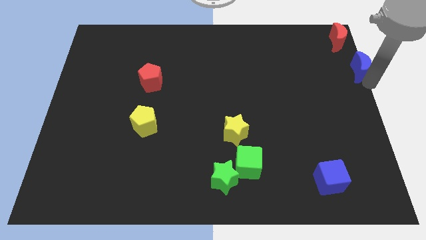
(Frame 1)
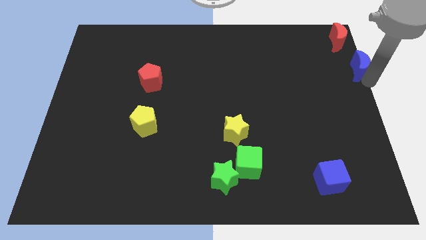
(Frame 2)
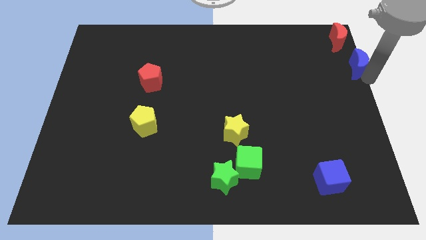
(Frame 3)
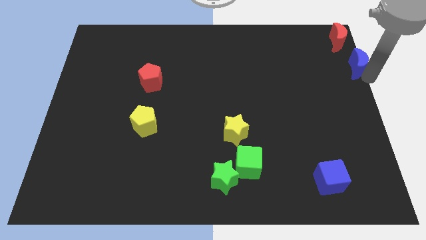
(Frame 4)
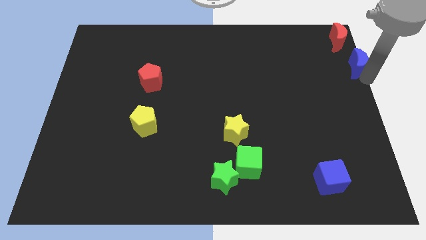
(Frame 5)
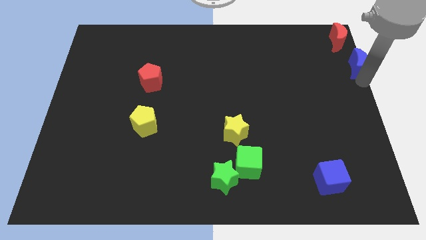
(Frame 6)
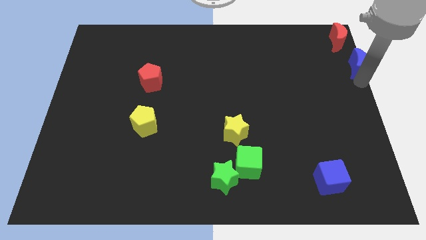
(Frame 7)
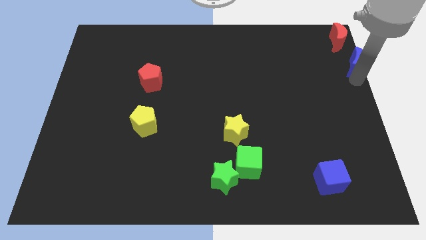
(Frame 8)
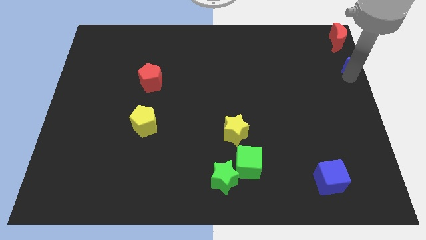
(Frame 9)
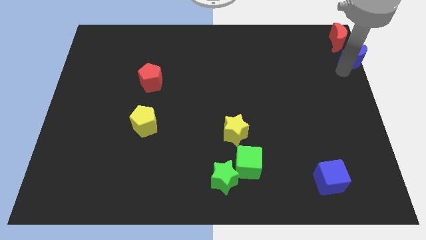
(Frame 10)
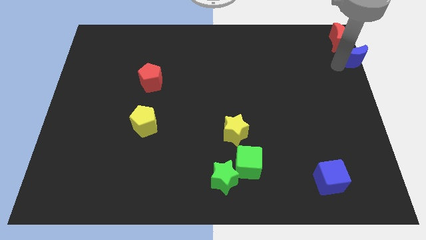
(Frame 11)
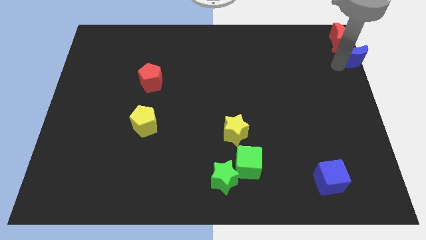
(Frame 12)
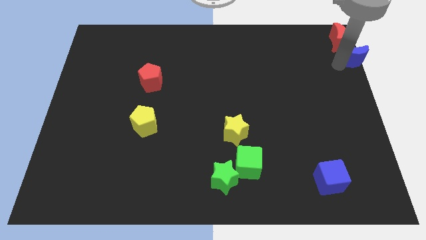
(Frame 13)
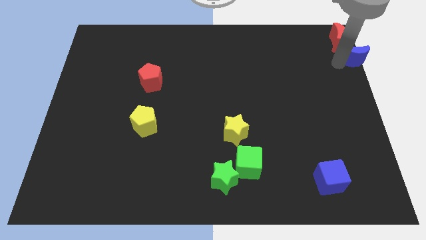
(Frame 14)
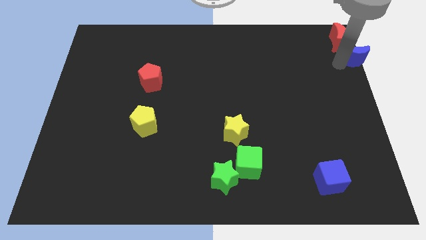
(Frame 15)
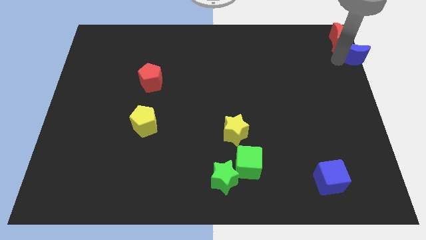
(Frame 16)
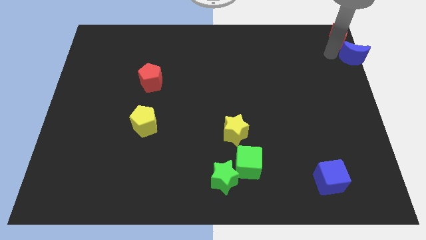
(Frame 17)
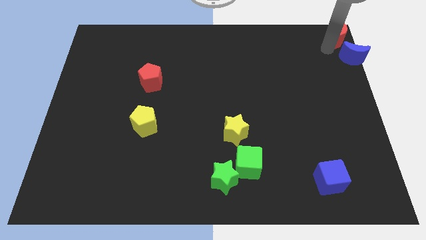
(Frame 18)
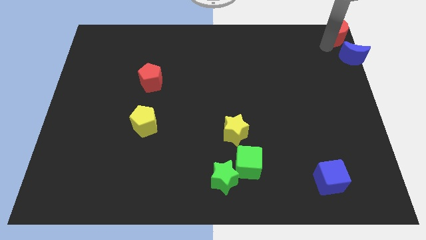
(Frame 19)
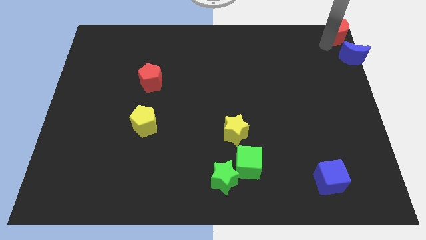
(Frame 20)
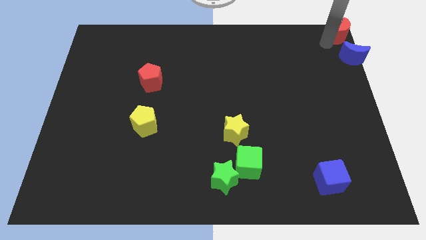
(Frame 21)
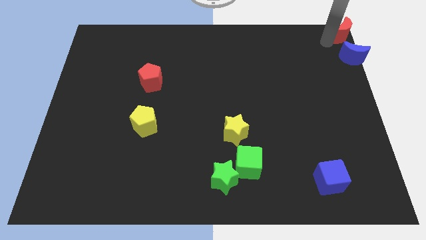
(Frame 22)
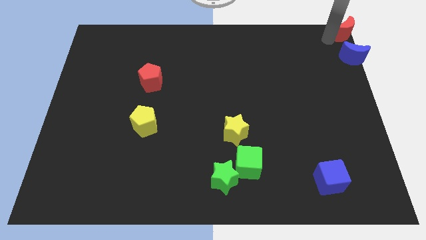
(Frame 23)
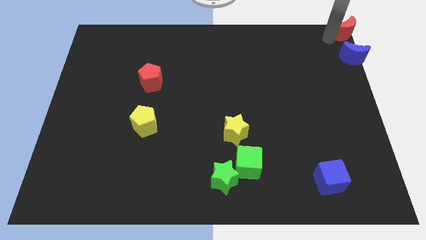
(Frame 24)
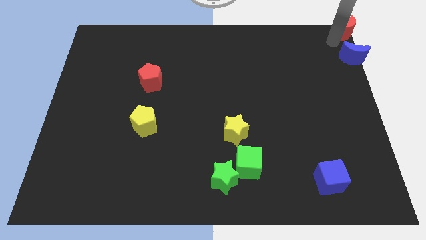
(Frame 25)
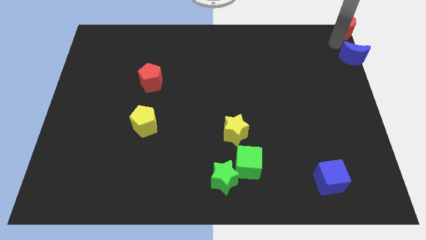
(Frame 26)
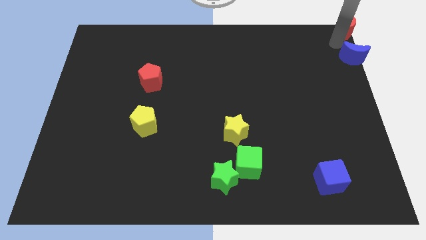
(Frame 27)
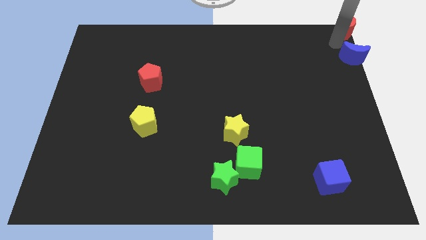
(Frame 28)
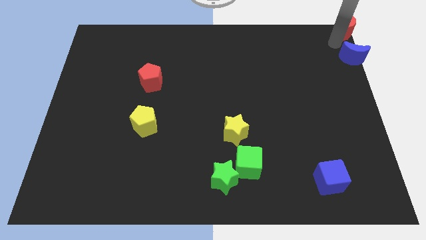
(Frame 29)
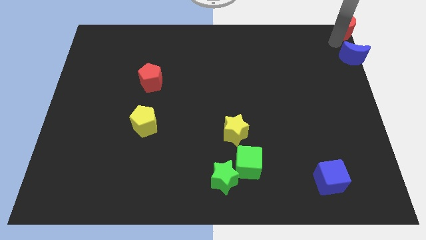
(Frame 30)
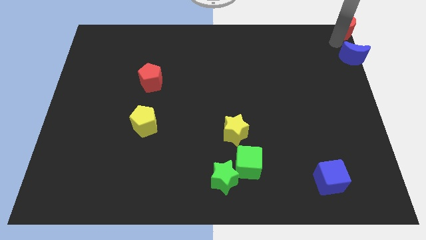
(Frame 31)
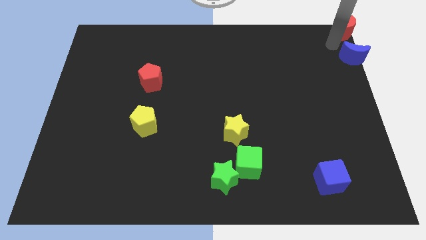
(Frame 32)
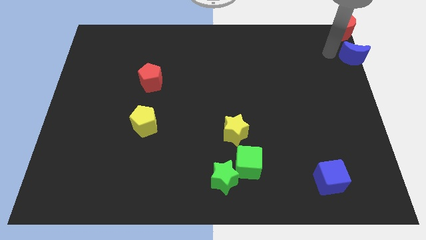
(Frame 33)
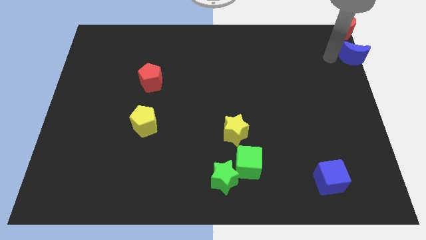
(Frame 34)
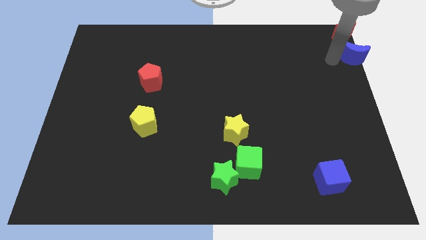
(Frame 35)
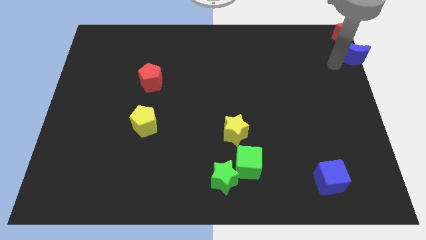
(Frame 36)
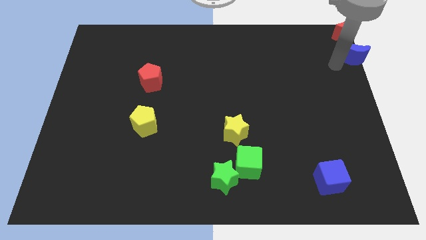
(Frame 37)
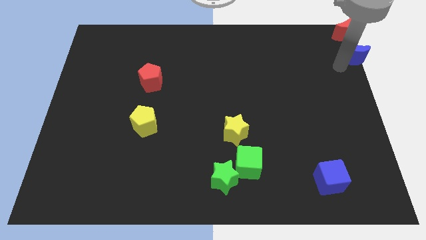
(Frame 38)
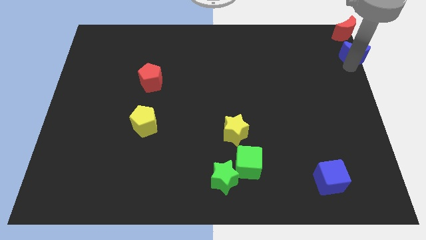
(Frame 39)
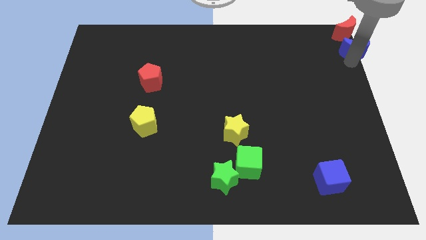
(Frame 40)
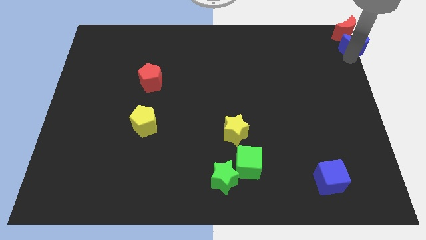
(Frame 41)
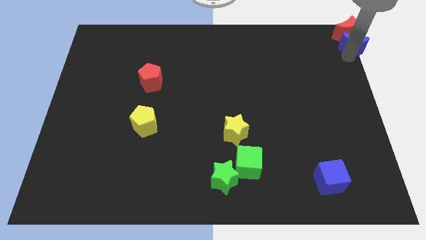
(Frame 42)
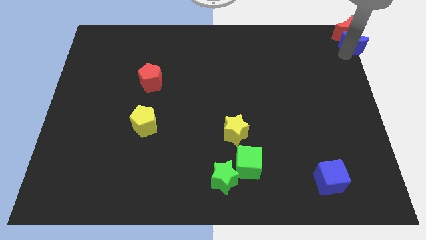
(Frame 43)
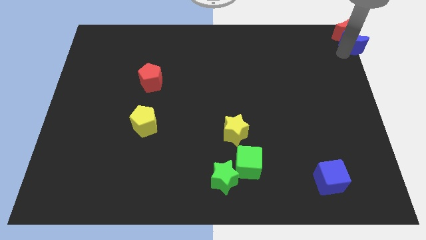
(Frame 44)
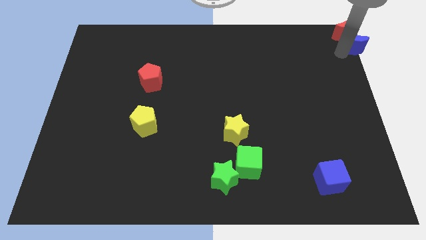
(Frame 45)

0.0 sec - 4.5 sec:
move blue moon into red moon

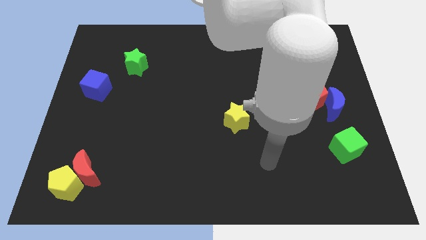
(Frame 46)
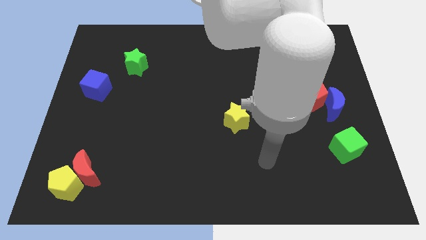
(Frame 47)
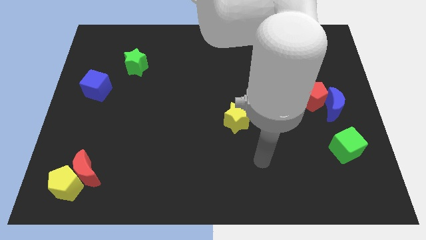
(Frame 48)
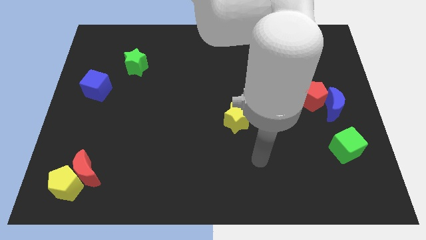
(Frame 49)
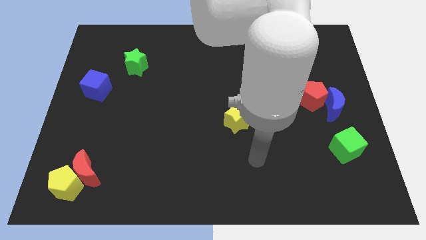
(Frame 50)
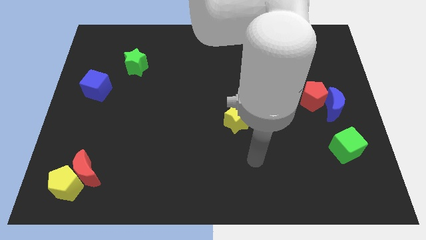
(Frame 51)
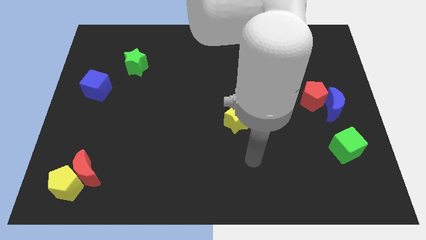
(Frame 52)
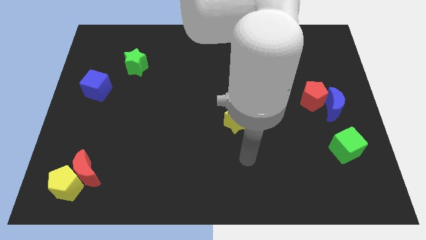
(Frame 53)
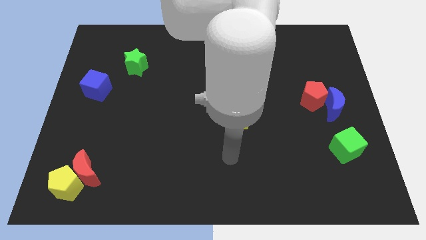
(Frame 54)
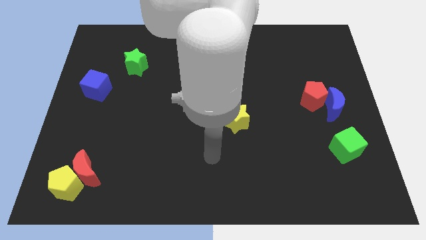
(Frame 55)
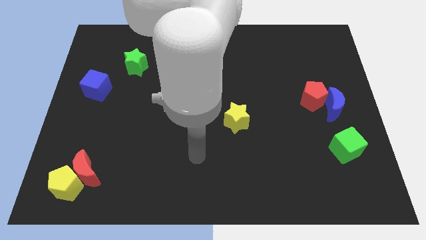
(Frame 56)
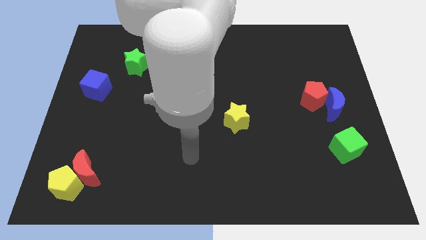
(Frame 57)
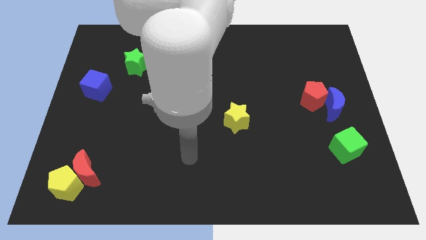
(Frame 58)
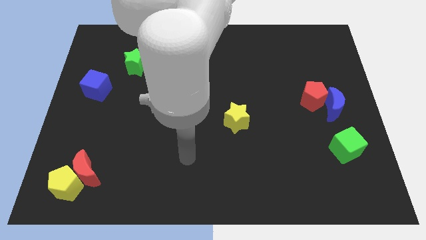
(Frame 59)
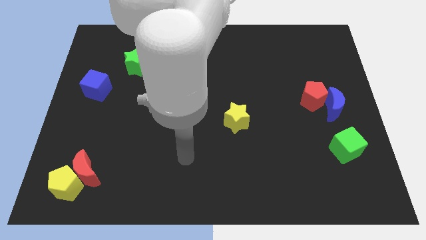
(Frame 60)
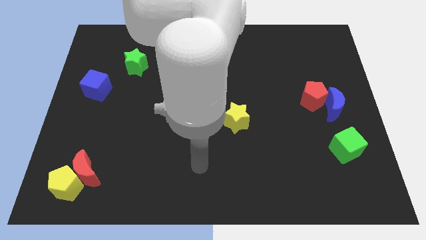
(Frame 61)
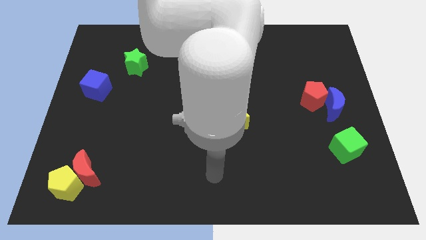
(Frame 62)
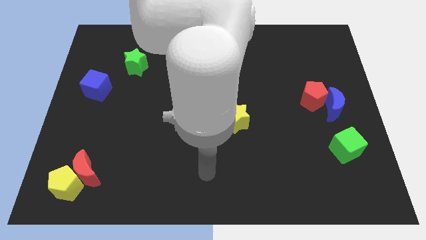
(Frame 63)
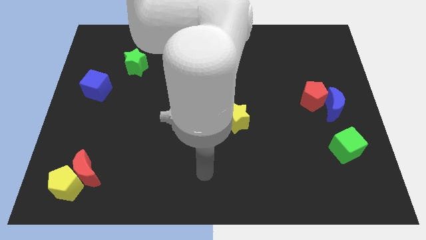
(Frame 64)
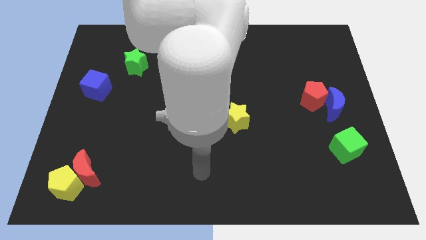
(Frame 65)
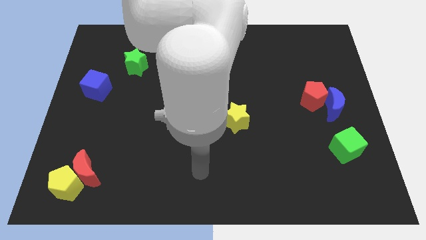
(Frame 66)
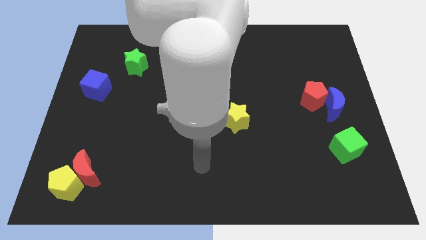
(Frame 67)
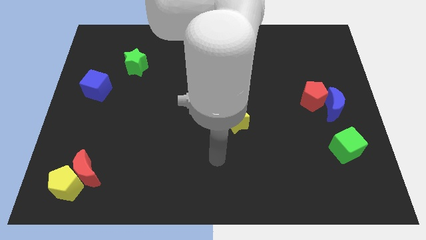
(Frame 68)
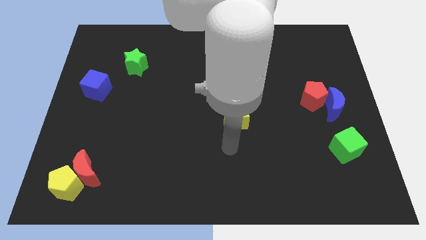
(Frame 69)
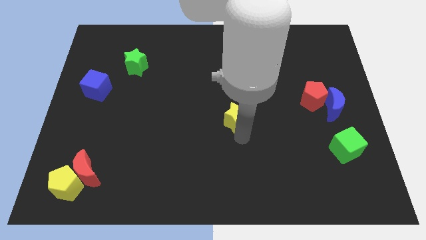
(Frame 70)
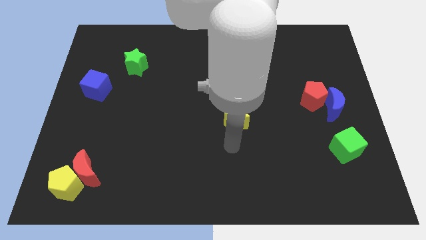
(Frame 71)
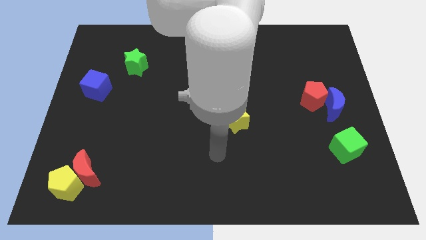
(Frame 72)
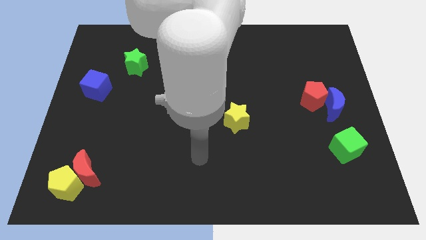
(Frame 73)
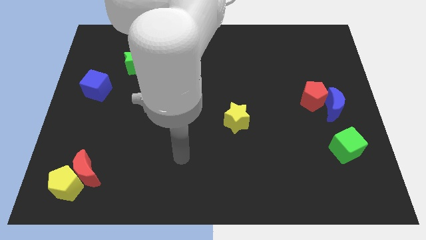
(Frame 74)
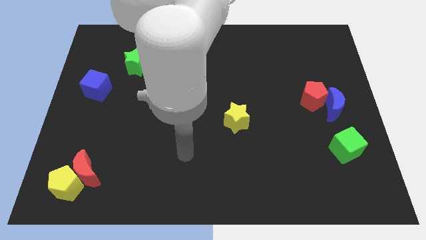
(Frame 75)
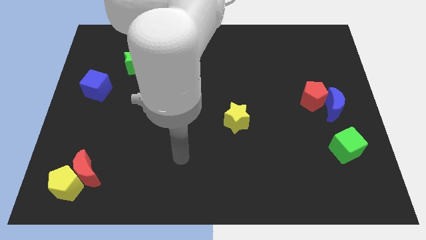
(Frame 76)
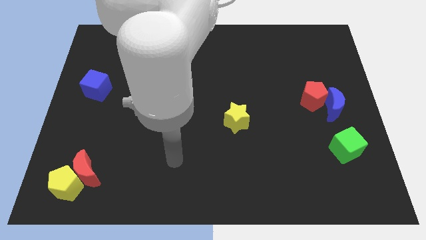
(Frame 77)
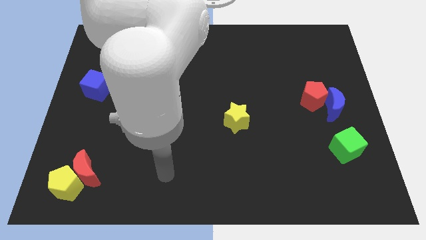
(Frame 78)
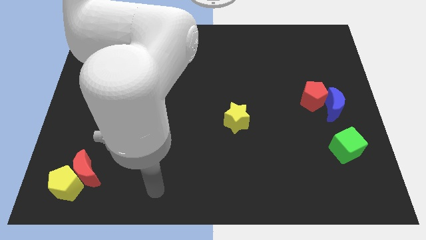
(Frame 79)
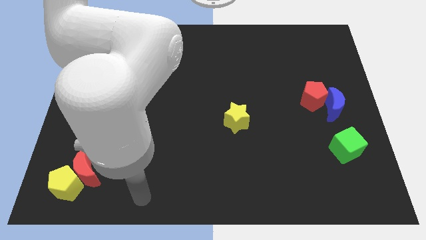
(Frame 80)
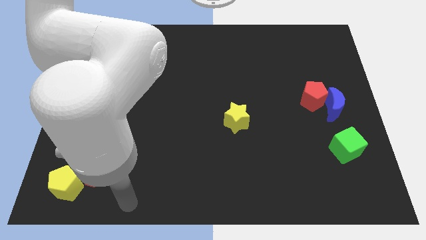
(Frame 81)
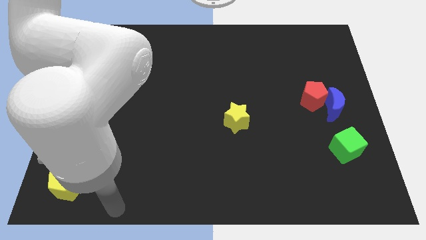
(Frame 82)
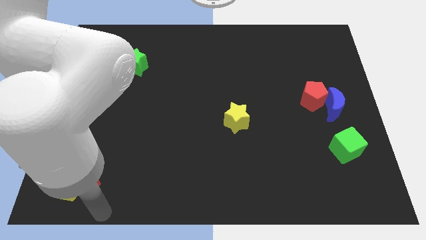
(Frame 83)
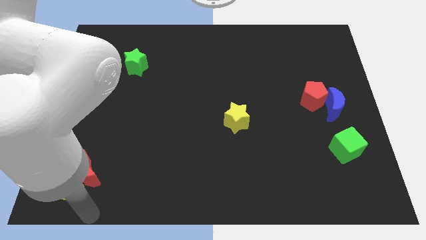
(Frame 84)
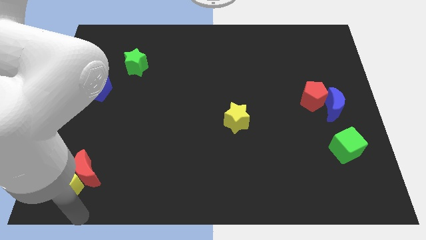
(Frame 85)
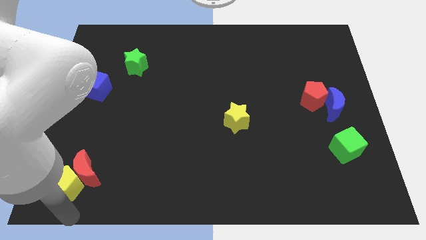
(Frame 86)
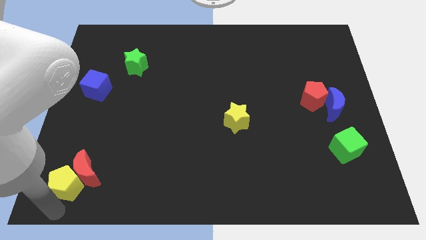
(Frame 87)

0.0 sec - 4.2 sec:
move your arm below the yellow pentagon

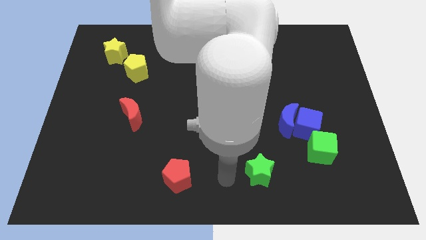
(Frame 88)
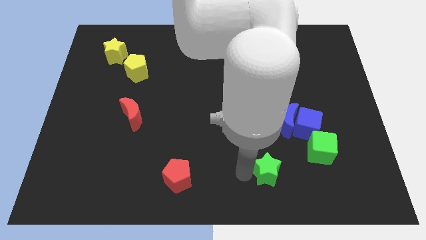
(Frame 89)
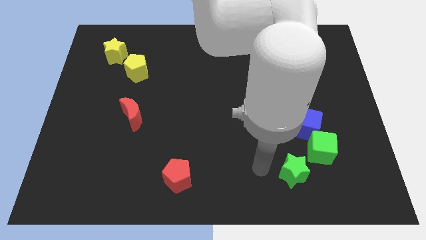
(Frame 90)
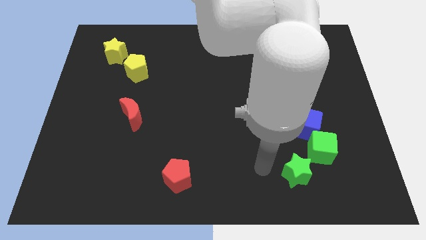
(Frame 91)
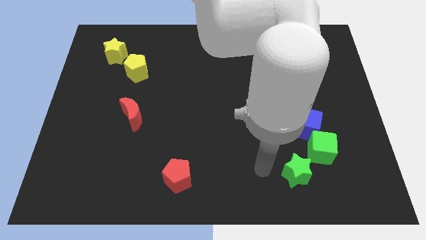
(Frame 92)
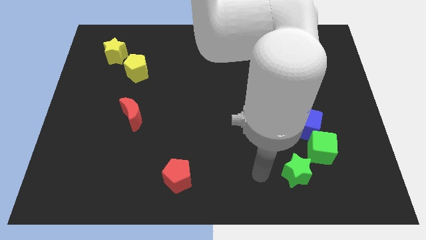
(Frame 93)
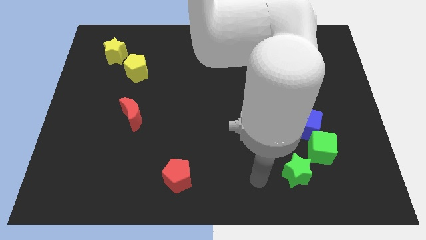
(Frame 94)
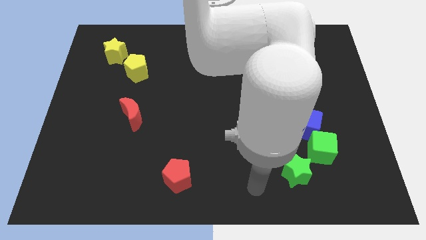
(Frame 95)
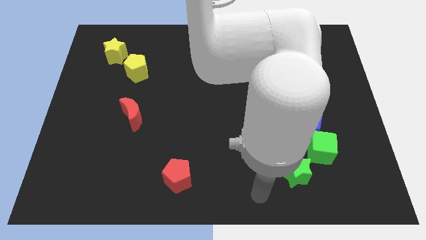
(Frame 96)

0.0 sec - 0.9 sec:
move the green star to the bottom left to the green cube
